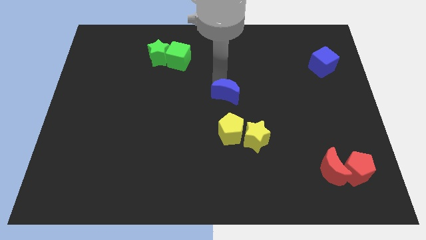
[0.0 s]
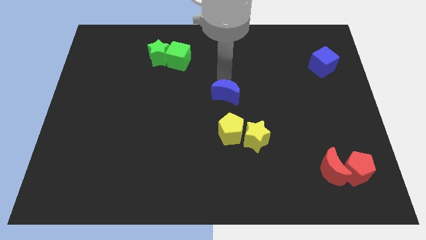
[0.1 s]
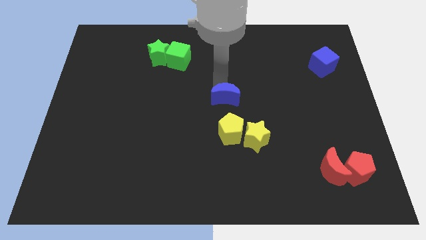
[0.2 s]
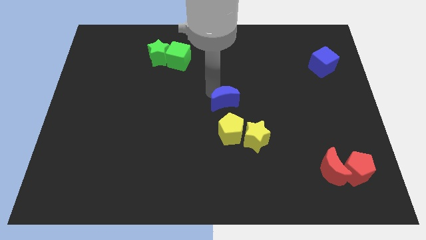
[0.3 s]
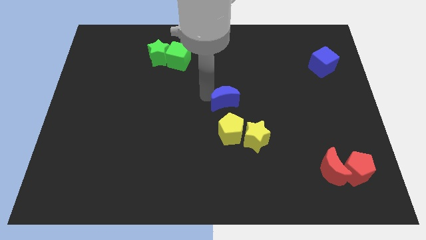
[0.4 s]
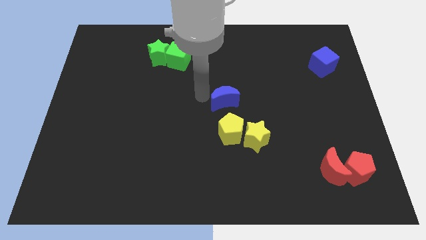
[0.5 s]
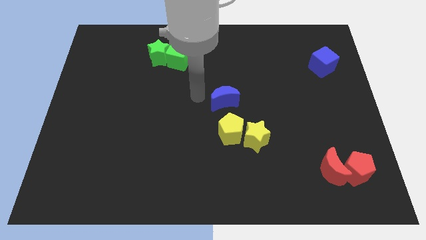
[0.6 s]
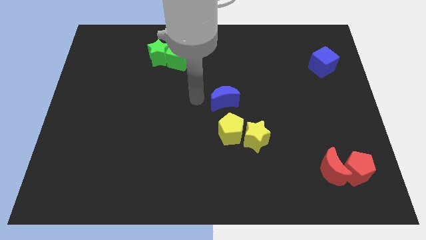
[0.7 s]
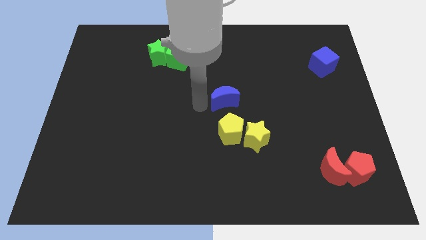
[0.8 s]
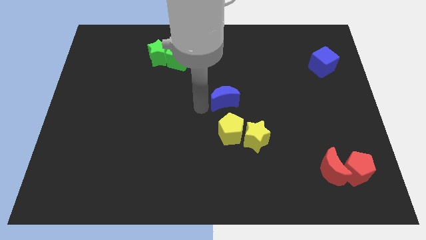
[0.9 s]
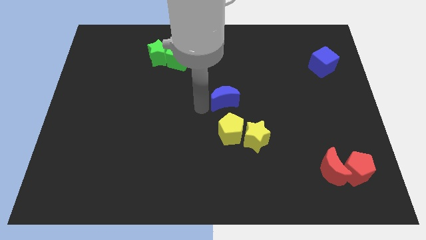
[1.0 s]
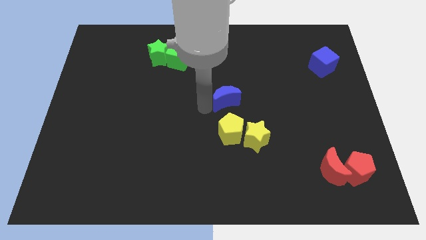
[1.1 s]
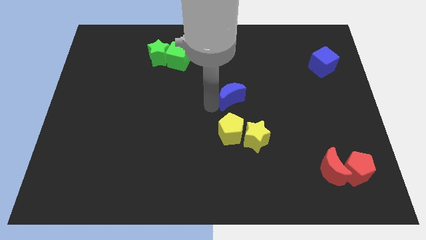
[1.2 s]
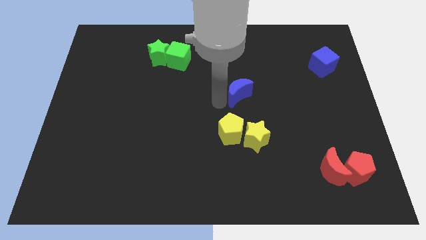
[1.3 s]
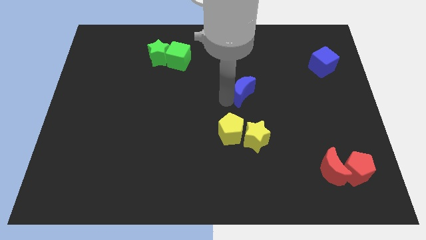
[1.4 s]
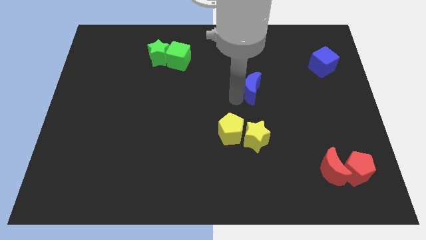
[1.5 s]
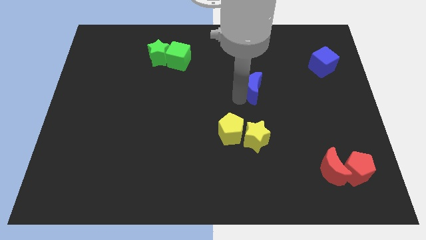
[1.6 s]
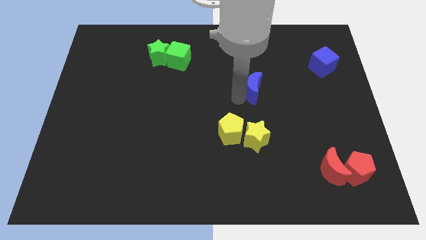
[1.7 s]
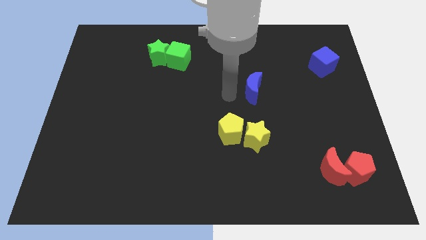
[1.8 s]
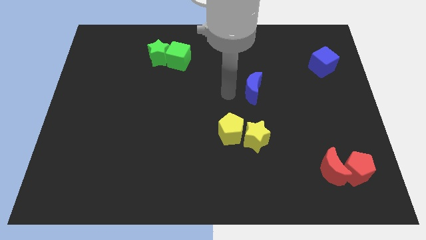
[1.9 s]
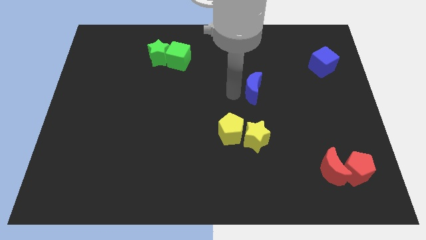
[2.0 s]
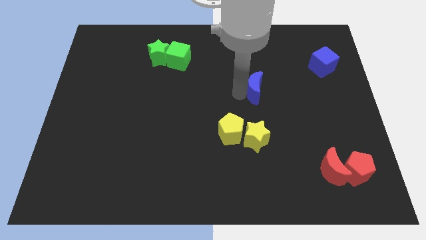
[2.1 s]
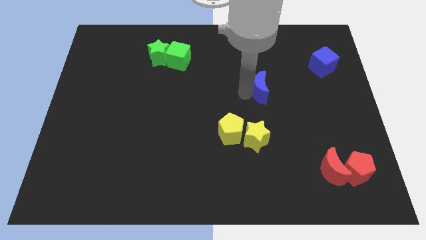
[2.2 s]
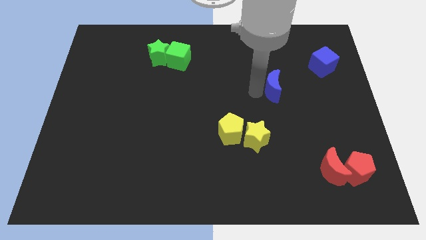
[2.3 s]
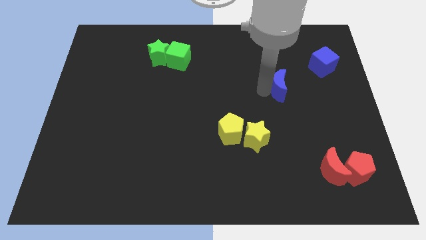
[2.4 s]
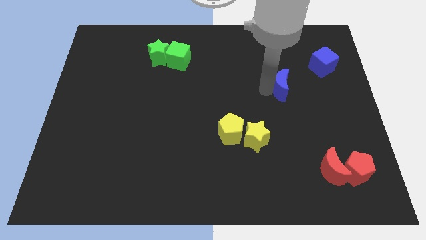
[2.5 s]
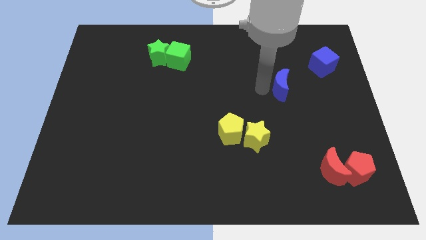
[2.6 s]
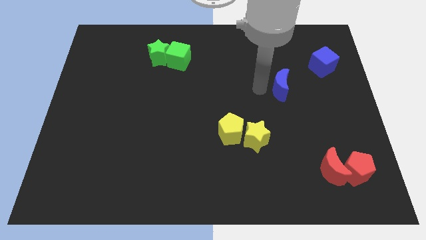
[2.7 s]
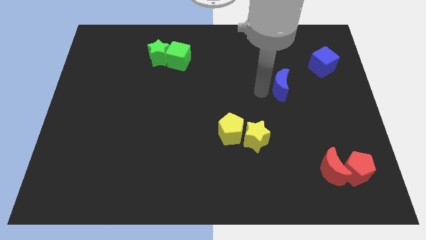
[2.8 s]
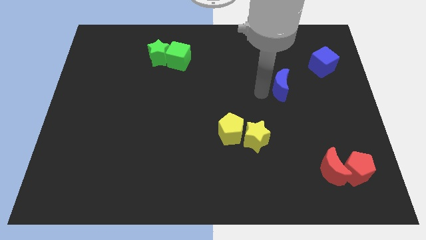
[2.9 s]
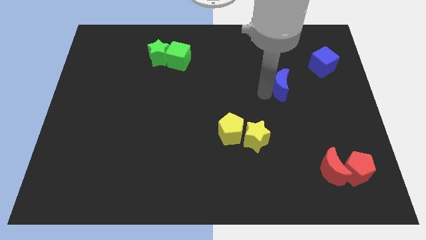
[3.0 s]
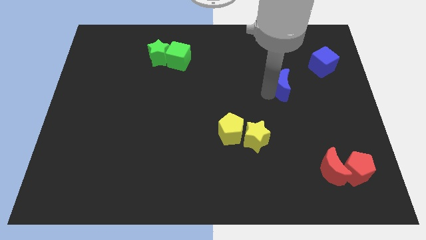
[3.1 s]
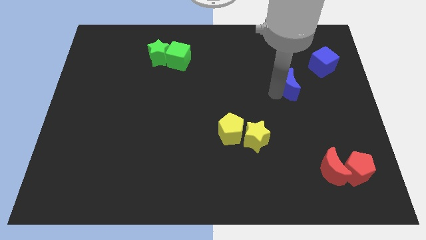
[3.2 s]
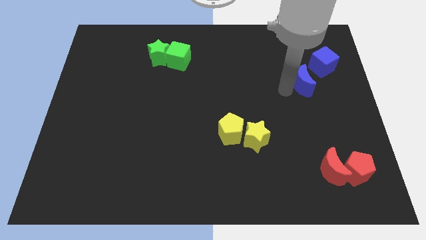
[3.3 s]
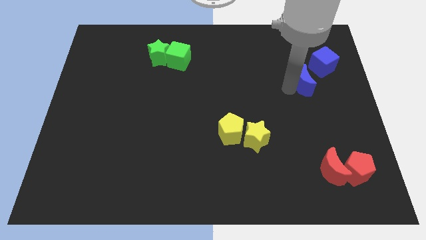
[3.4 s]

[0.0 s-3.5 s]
slide the blue moon towards the blue cube

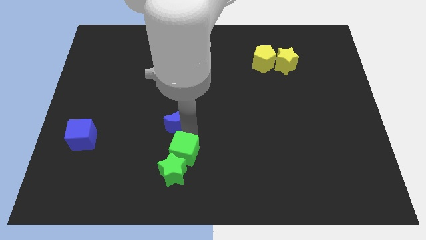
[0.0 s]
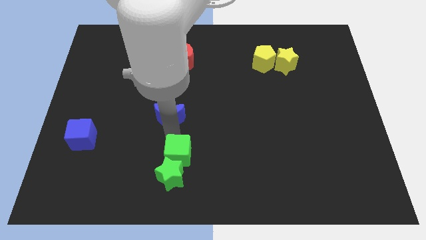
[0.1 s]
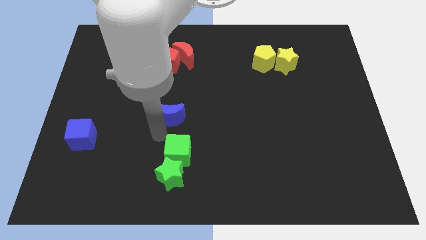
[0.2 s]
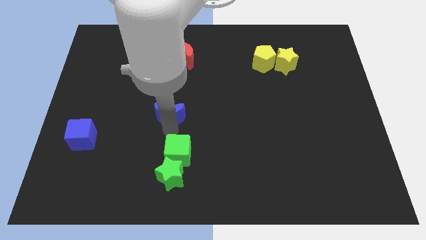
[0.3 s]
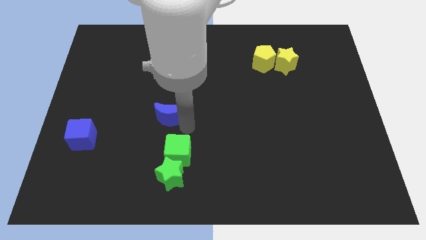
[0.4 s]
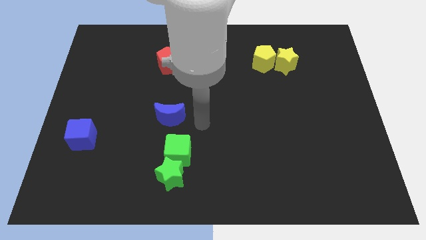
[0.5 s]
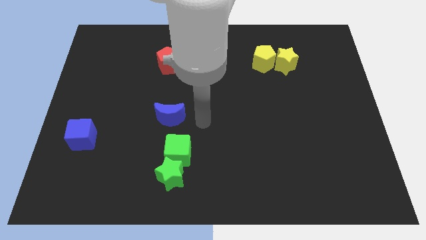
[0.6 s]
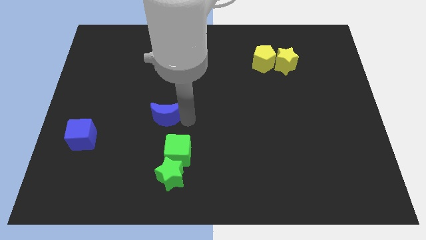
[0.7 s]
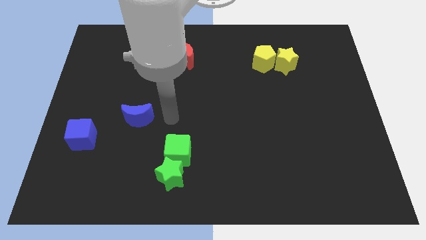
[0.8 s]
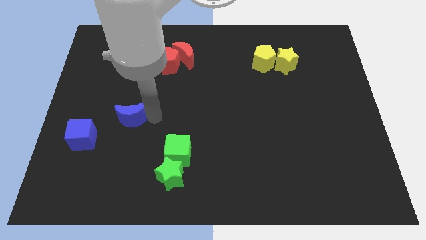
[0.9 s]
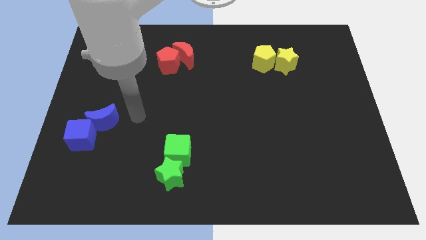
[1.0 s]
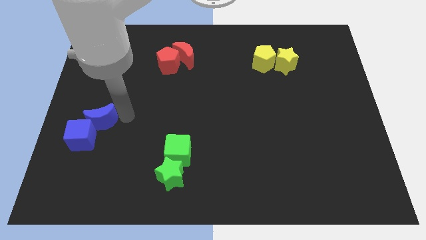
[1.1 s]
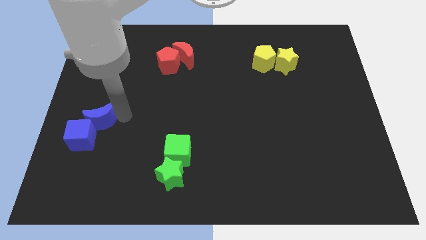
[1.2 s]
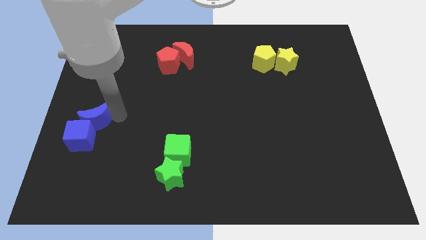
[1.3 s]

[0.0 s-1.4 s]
move the blue crescent to the top of the blue cube

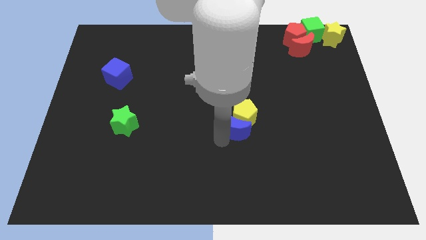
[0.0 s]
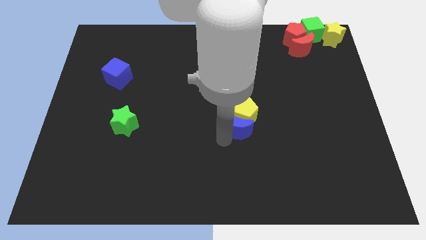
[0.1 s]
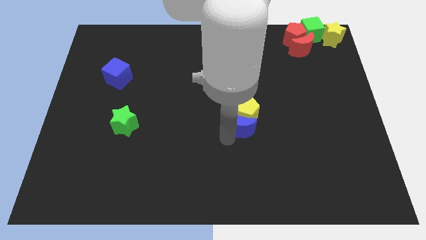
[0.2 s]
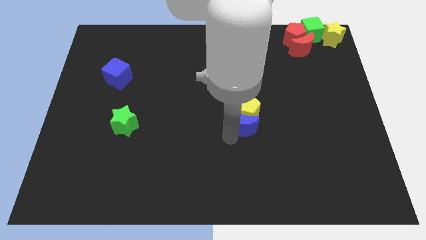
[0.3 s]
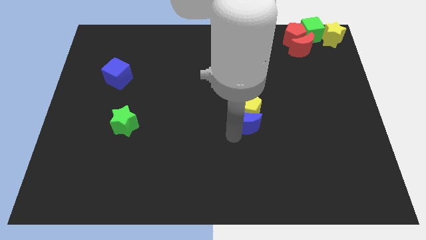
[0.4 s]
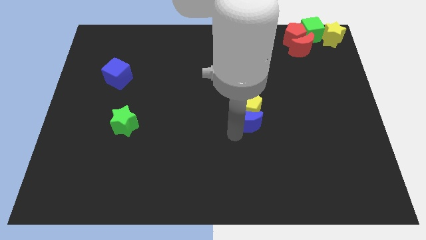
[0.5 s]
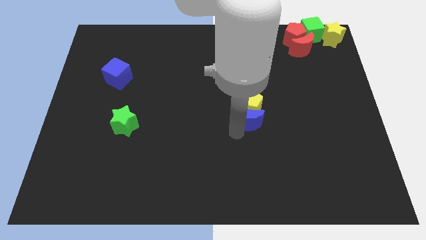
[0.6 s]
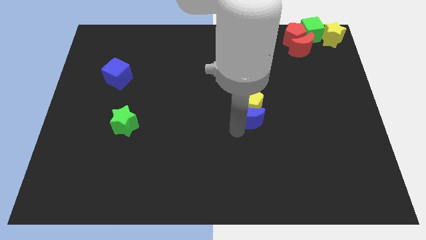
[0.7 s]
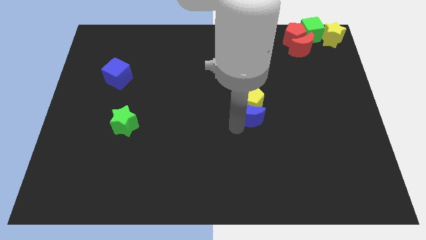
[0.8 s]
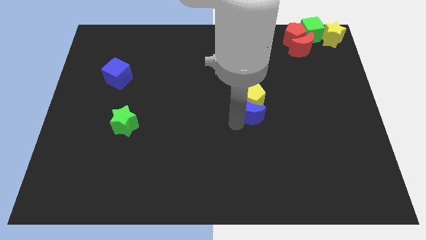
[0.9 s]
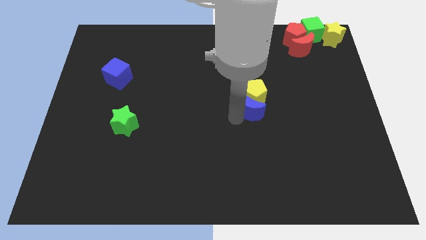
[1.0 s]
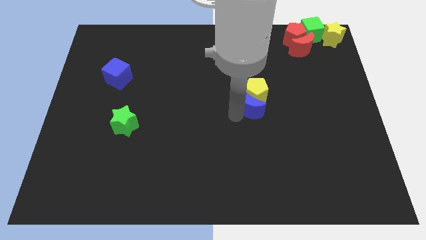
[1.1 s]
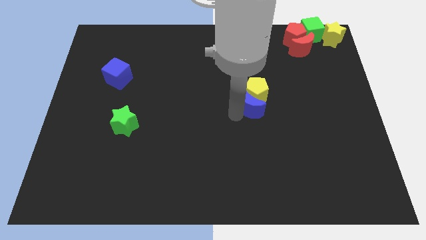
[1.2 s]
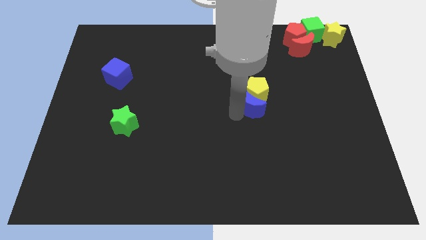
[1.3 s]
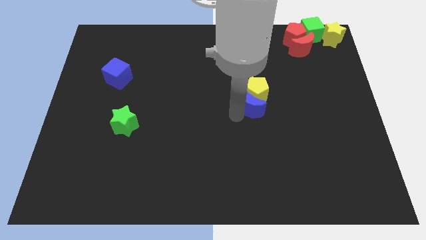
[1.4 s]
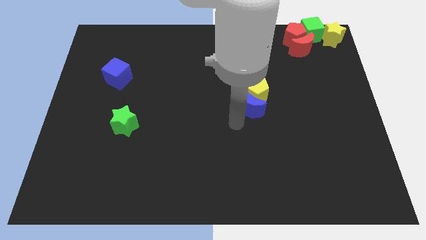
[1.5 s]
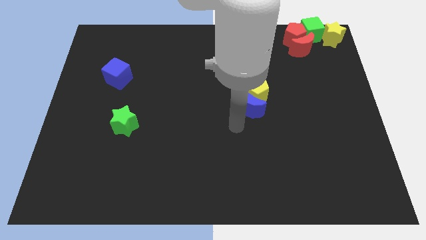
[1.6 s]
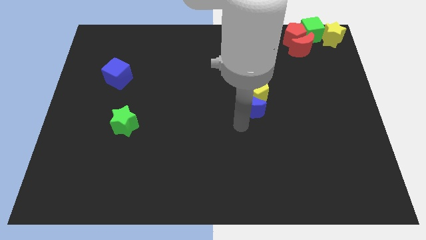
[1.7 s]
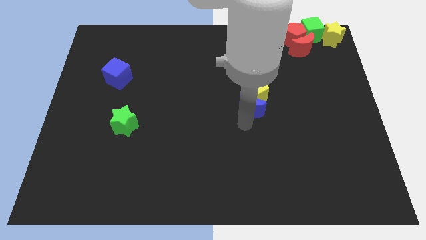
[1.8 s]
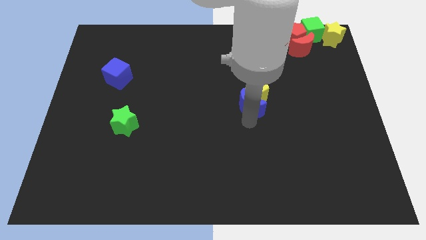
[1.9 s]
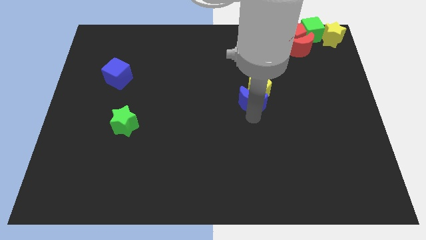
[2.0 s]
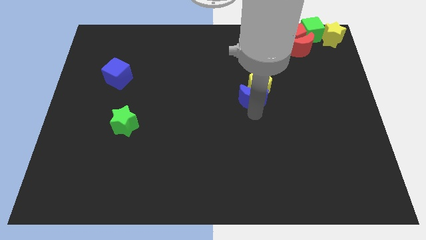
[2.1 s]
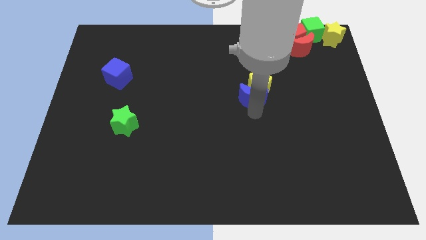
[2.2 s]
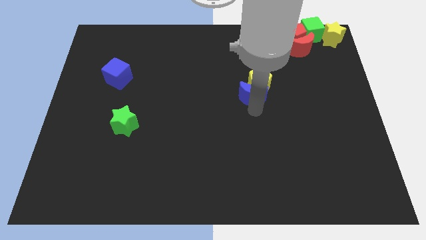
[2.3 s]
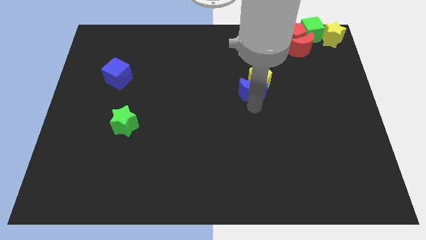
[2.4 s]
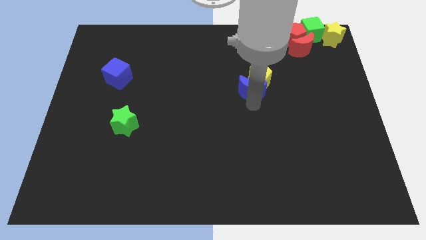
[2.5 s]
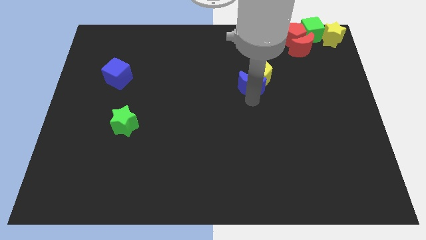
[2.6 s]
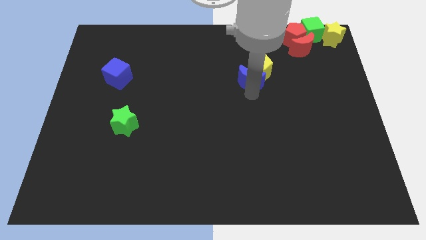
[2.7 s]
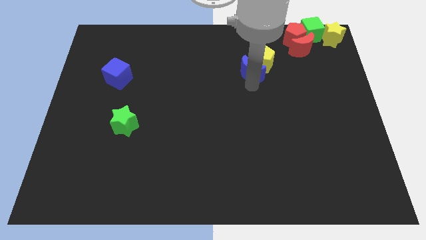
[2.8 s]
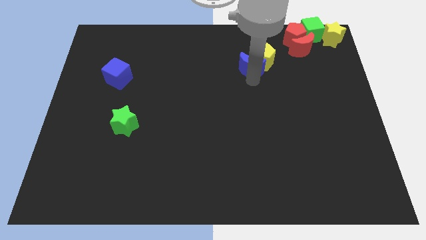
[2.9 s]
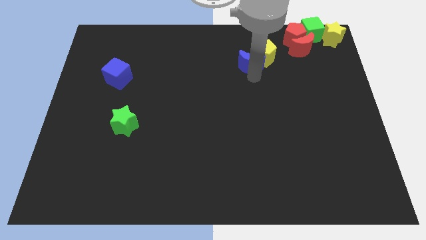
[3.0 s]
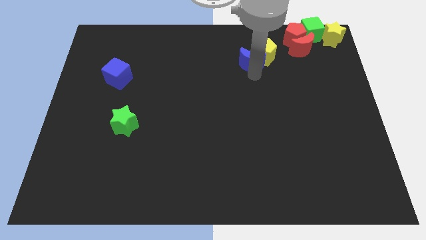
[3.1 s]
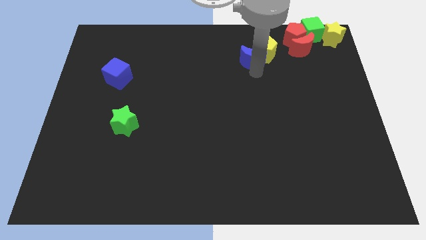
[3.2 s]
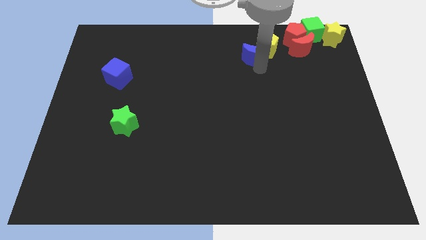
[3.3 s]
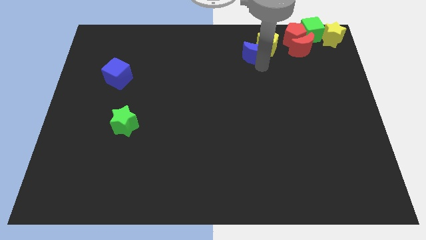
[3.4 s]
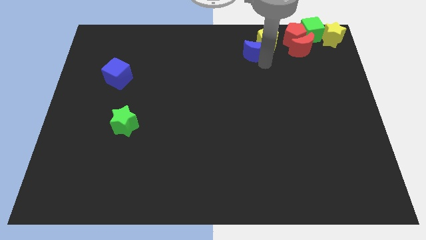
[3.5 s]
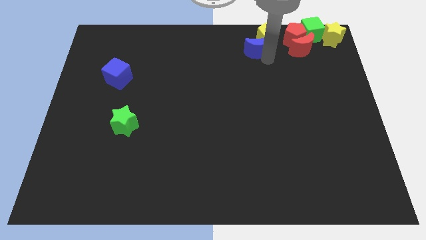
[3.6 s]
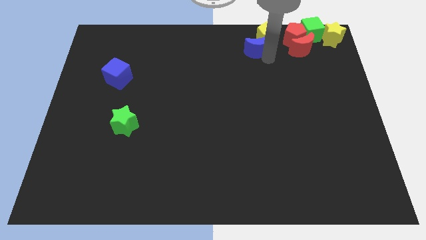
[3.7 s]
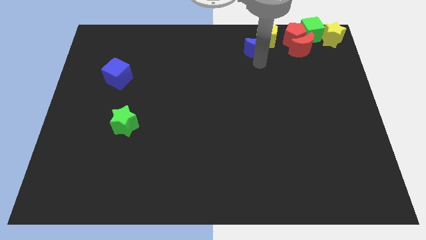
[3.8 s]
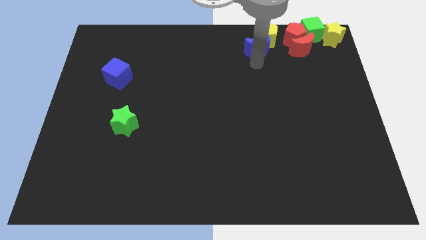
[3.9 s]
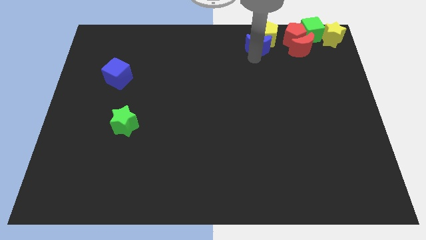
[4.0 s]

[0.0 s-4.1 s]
move the blue moon along with the yellow pentagon towards the top
